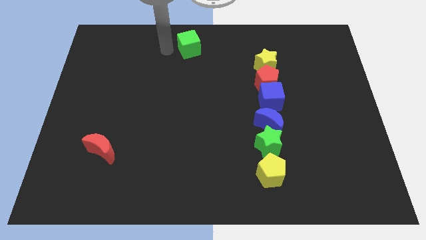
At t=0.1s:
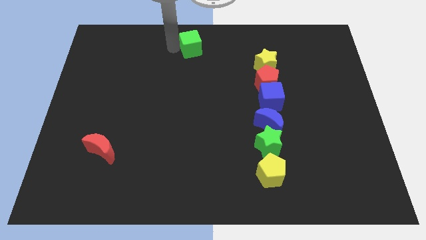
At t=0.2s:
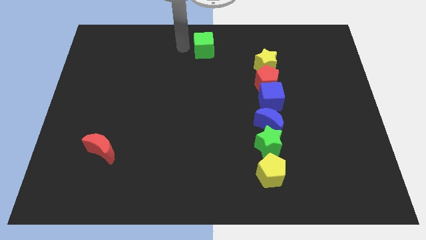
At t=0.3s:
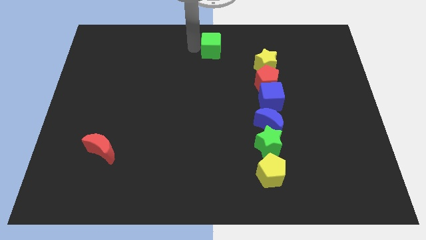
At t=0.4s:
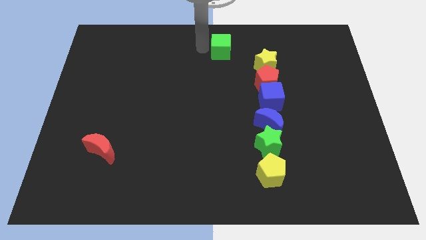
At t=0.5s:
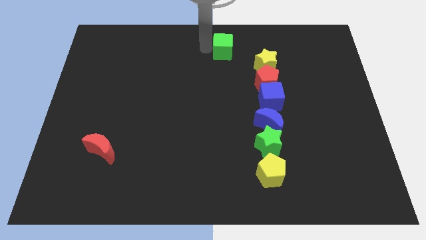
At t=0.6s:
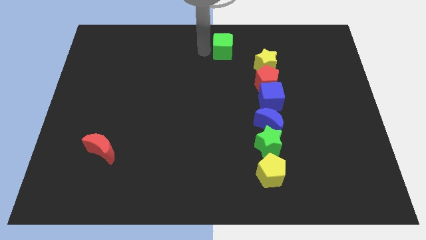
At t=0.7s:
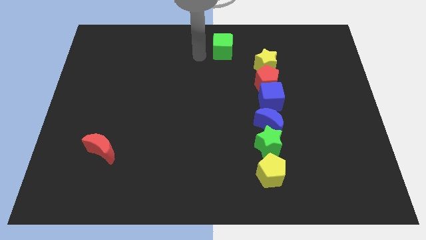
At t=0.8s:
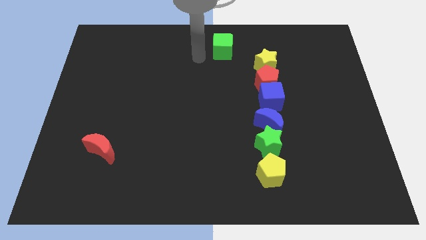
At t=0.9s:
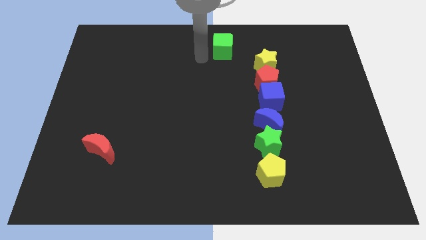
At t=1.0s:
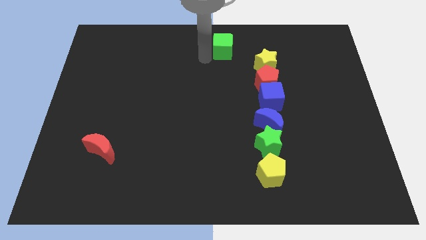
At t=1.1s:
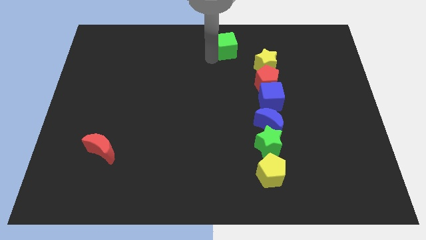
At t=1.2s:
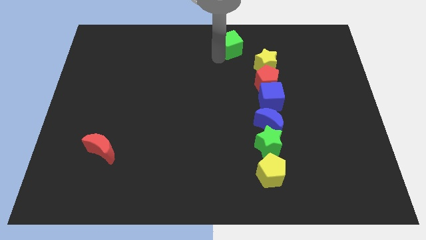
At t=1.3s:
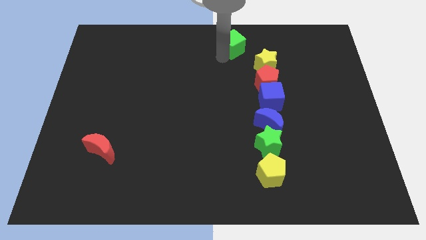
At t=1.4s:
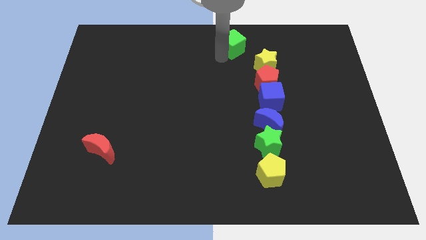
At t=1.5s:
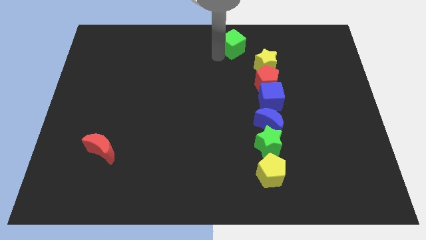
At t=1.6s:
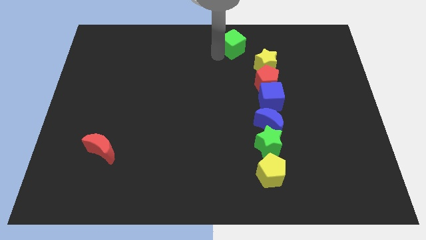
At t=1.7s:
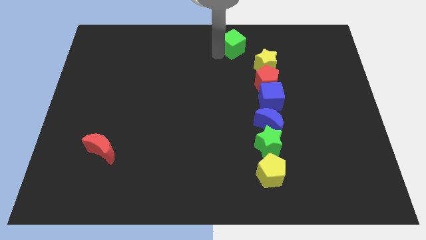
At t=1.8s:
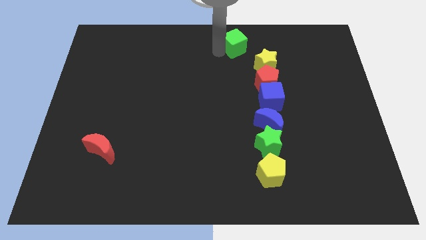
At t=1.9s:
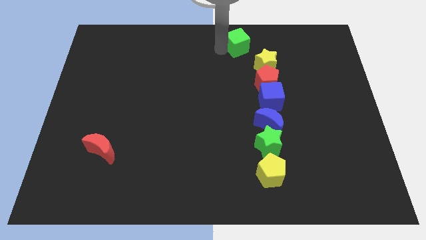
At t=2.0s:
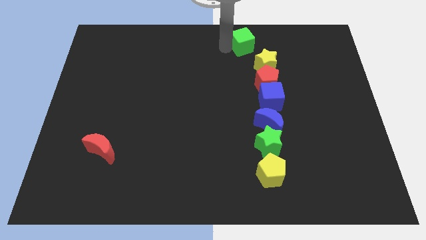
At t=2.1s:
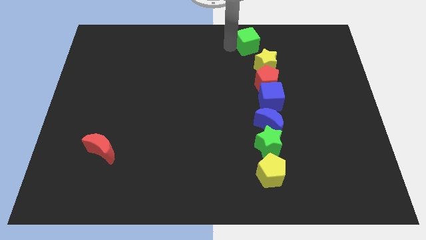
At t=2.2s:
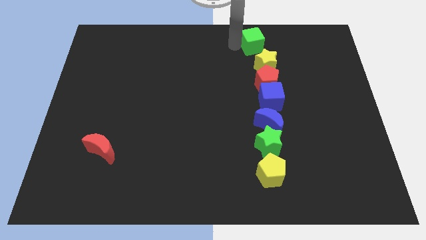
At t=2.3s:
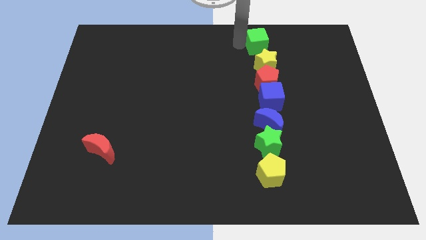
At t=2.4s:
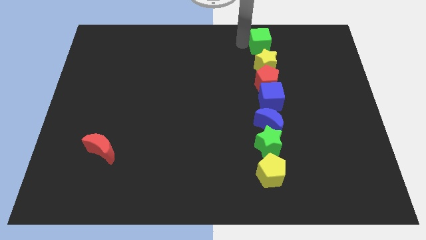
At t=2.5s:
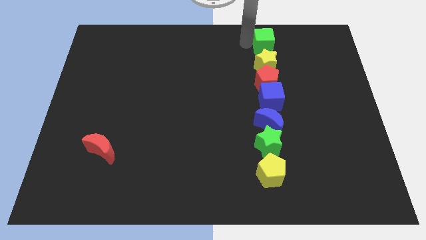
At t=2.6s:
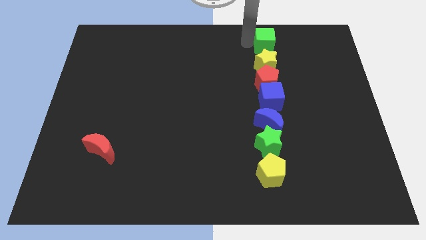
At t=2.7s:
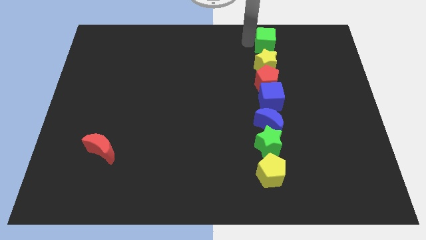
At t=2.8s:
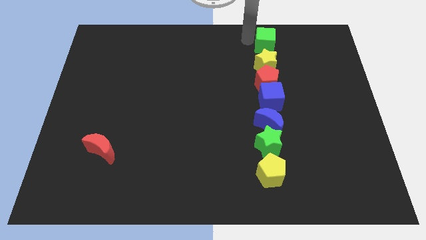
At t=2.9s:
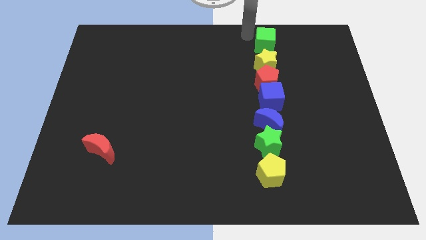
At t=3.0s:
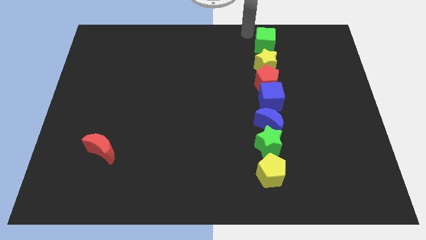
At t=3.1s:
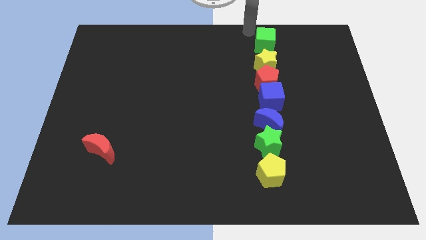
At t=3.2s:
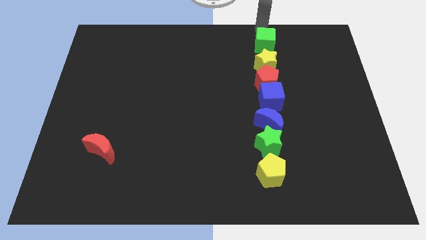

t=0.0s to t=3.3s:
push the green cube to the top of the yellow star

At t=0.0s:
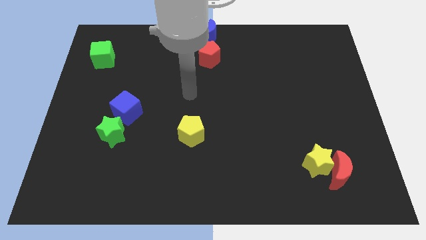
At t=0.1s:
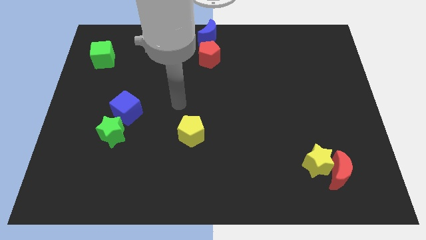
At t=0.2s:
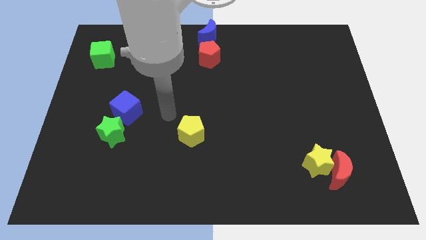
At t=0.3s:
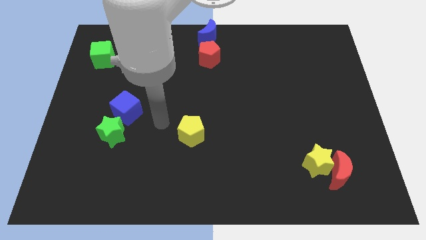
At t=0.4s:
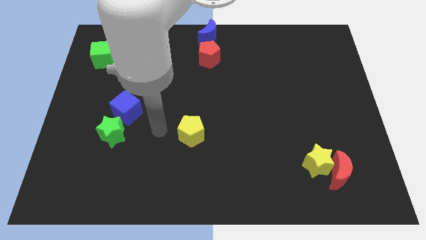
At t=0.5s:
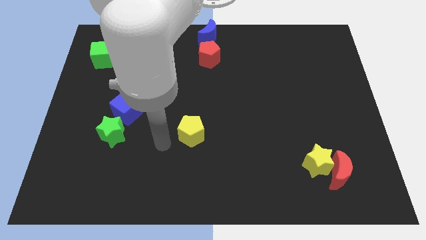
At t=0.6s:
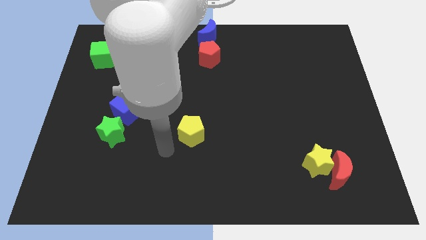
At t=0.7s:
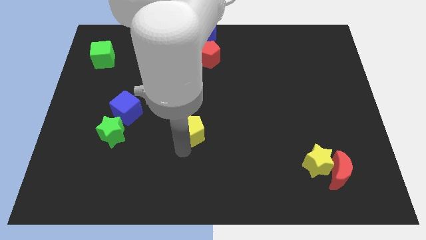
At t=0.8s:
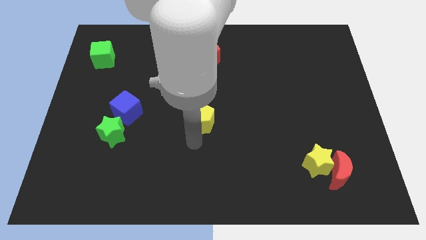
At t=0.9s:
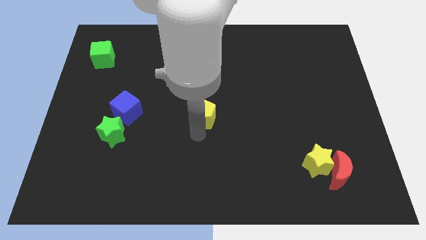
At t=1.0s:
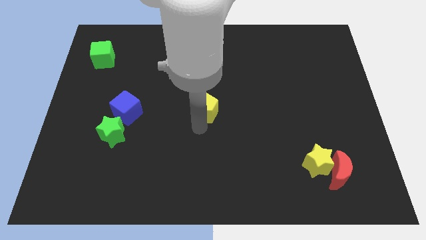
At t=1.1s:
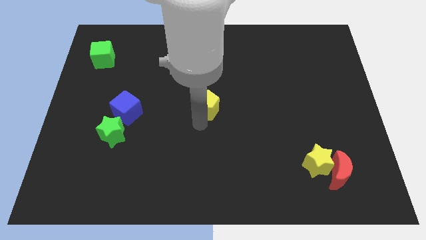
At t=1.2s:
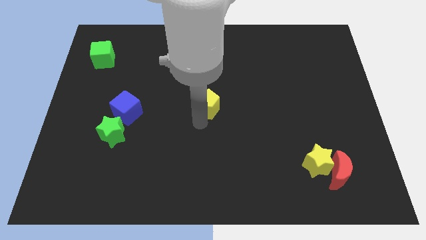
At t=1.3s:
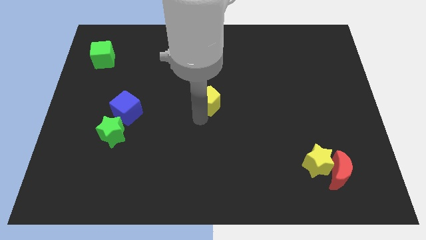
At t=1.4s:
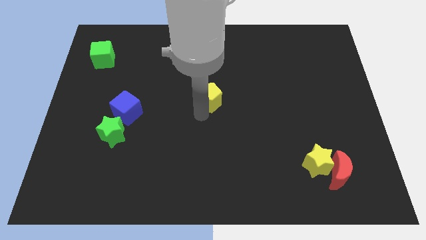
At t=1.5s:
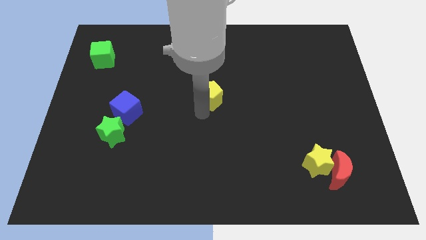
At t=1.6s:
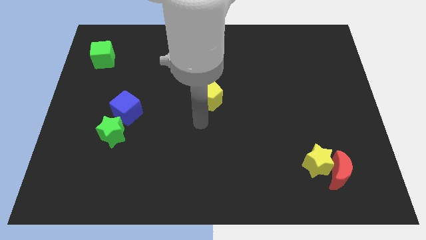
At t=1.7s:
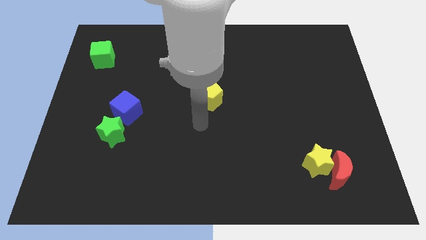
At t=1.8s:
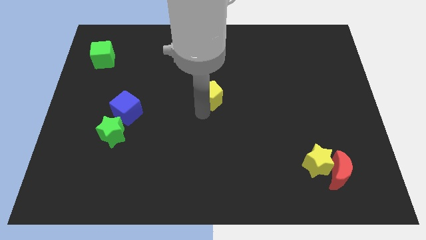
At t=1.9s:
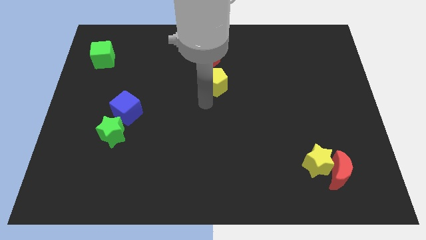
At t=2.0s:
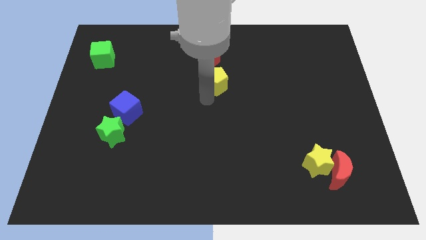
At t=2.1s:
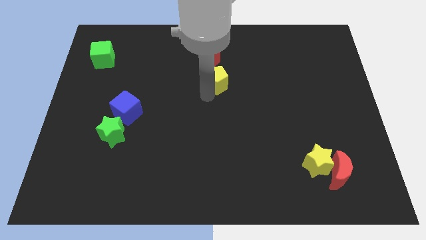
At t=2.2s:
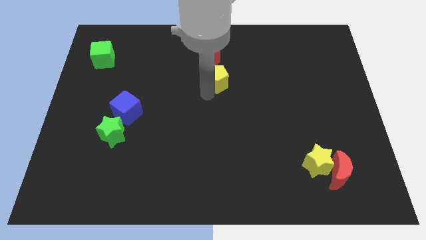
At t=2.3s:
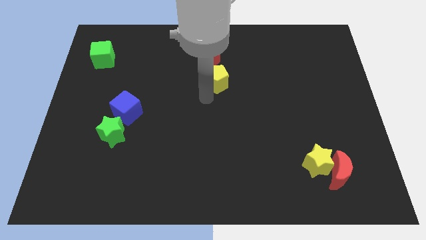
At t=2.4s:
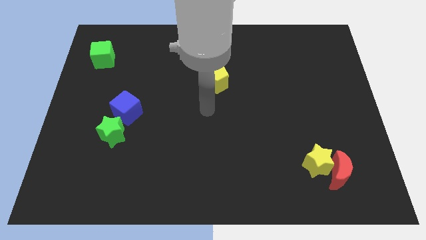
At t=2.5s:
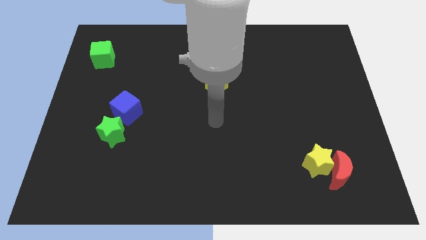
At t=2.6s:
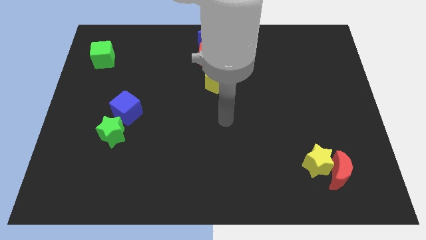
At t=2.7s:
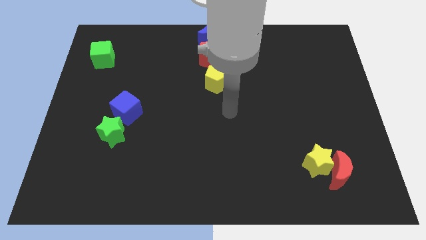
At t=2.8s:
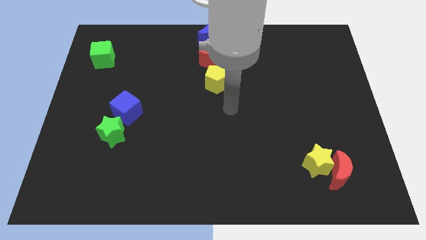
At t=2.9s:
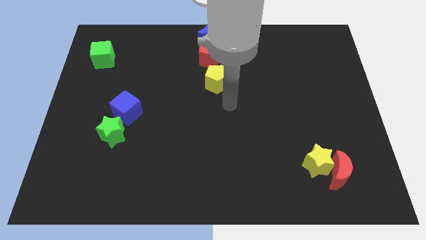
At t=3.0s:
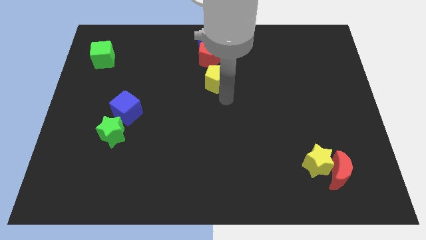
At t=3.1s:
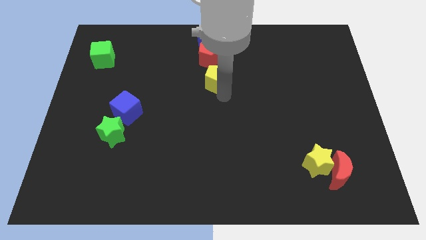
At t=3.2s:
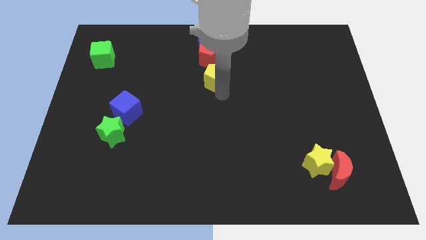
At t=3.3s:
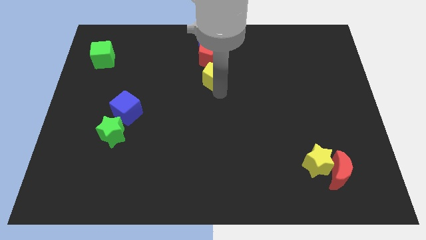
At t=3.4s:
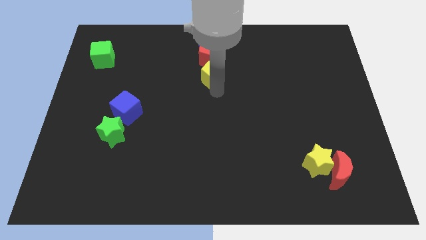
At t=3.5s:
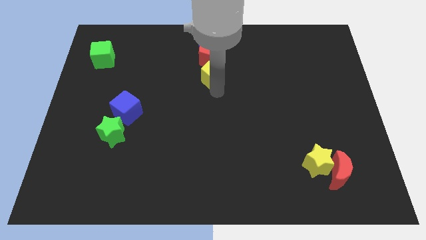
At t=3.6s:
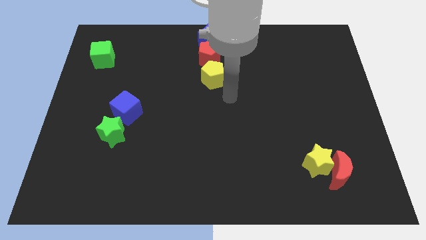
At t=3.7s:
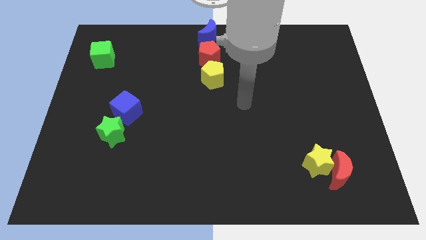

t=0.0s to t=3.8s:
move the yellow pentagon to the bottom of the red pentagon

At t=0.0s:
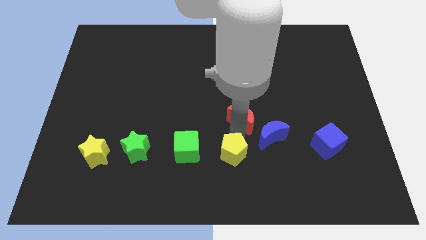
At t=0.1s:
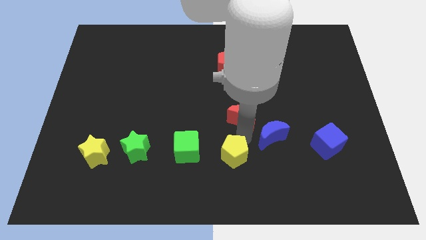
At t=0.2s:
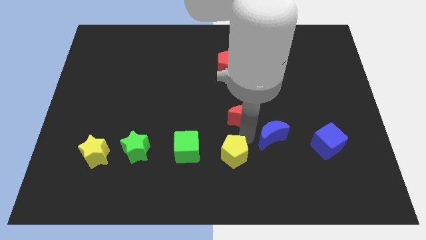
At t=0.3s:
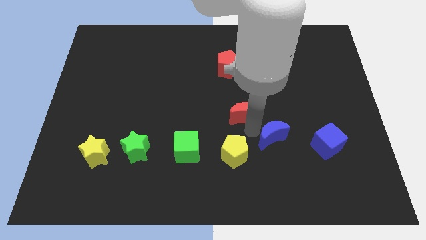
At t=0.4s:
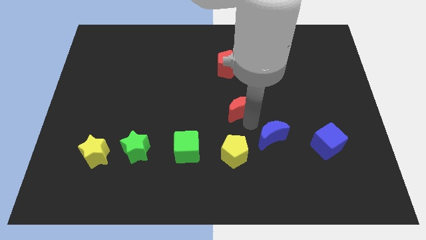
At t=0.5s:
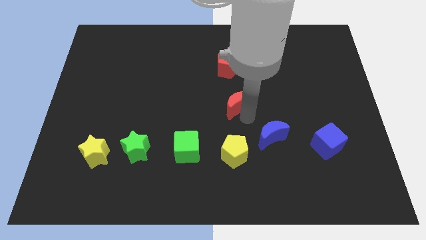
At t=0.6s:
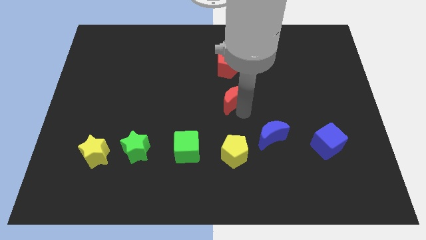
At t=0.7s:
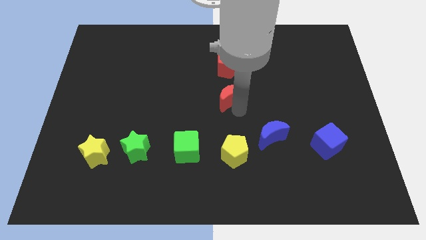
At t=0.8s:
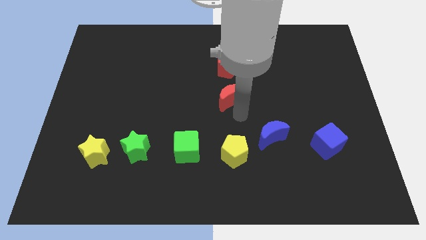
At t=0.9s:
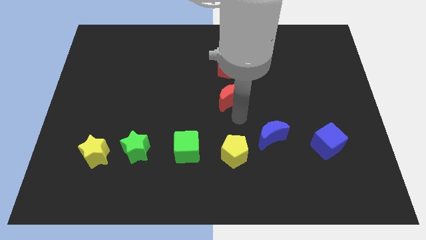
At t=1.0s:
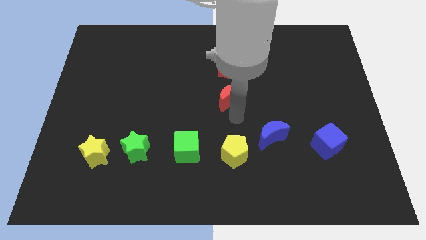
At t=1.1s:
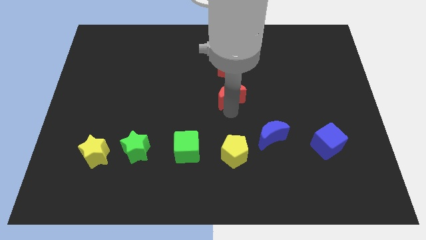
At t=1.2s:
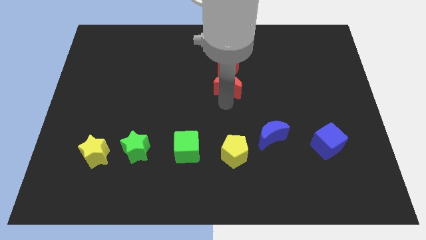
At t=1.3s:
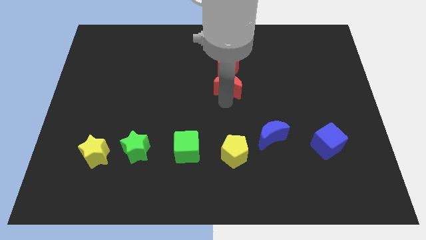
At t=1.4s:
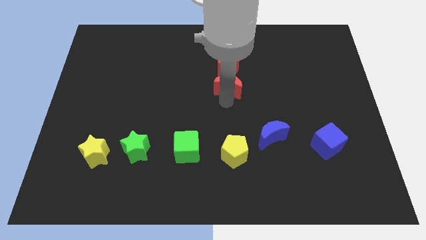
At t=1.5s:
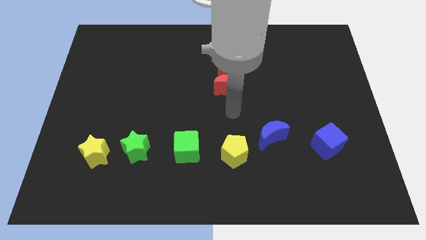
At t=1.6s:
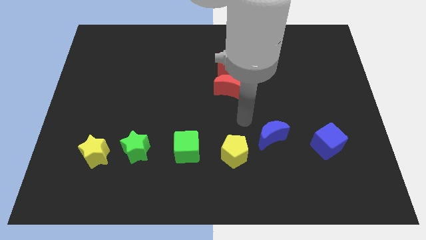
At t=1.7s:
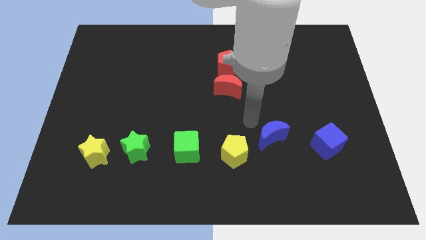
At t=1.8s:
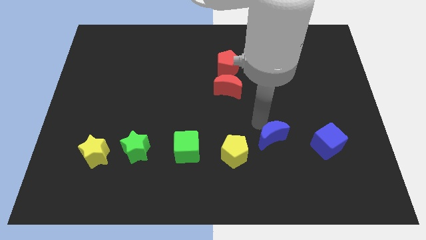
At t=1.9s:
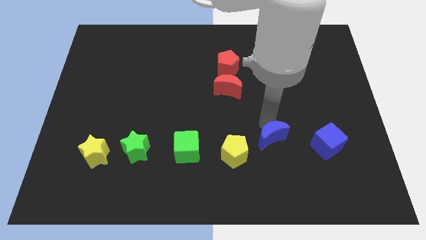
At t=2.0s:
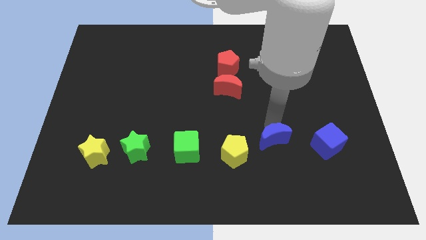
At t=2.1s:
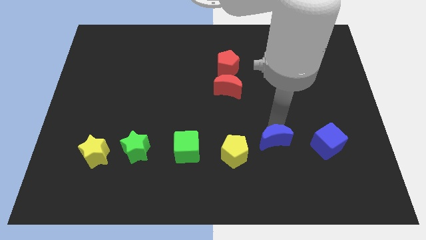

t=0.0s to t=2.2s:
push the red crescent to the bottom side of the red pentagon
